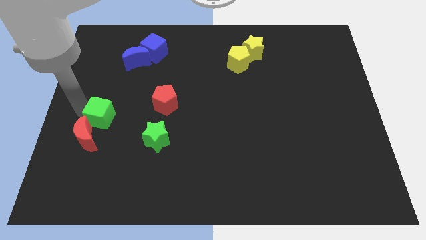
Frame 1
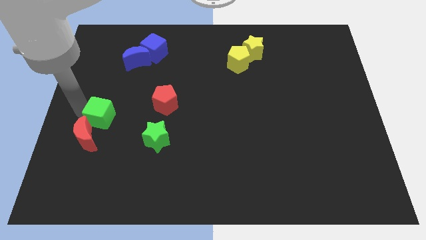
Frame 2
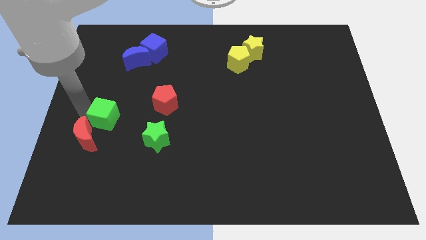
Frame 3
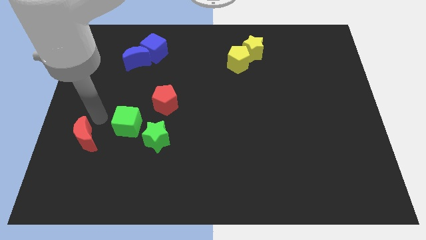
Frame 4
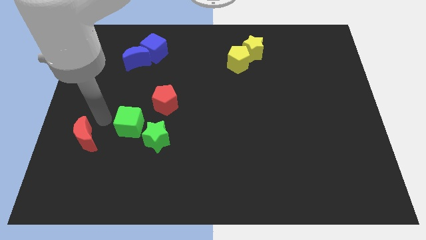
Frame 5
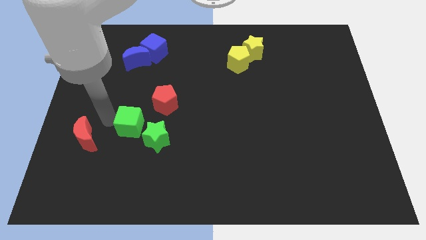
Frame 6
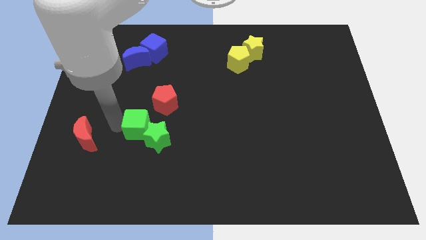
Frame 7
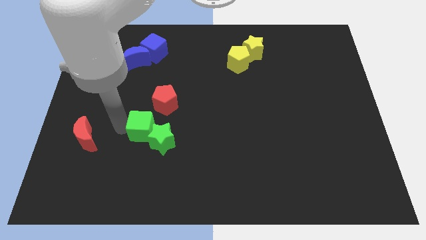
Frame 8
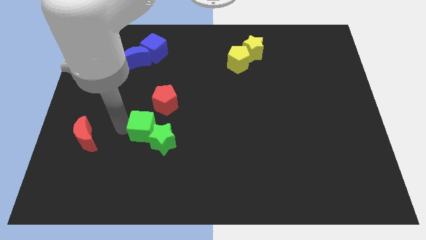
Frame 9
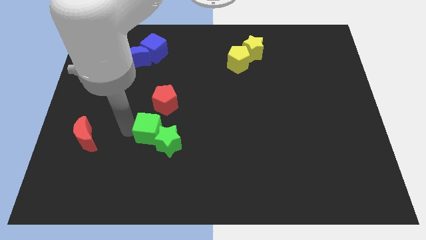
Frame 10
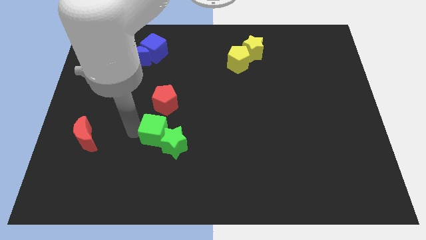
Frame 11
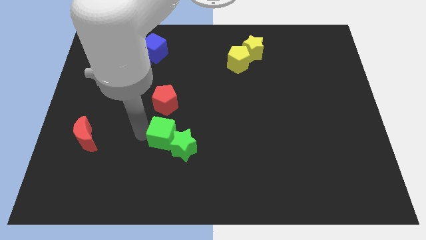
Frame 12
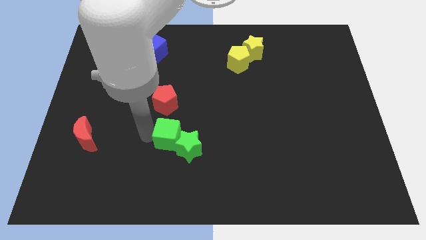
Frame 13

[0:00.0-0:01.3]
move the green cube into the green star

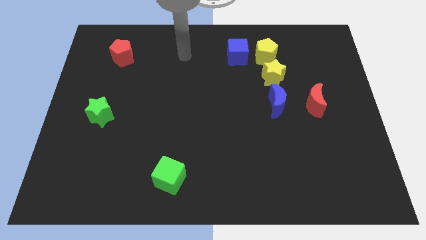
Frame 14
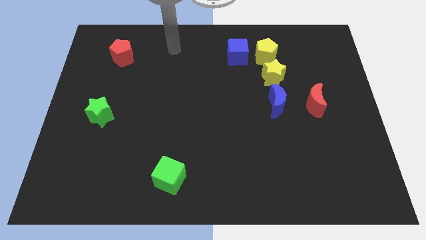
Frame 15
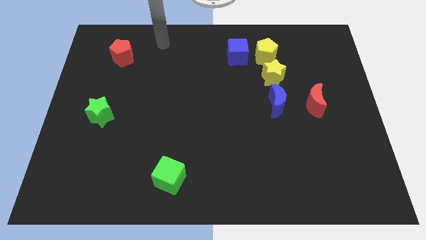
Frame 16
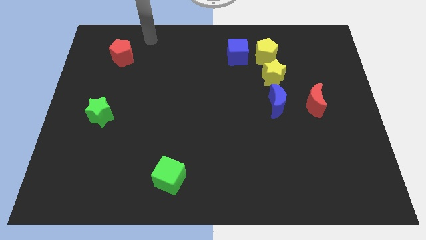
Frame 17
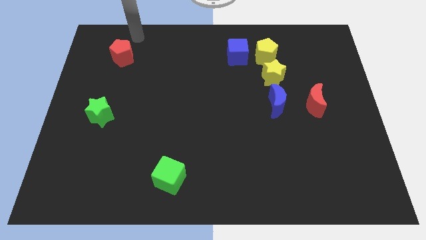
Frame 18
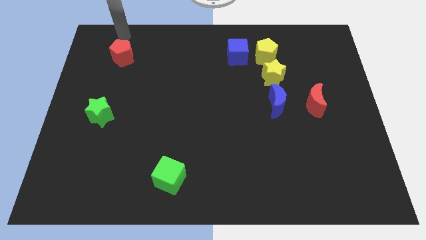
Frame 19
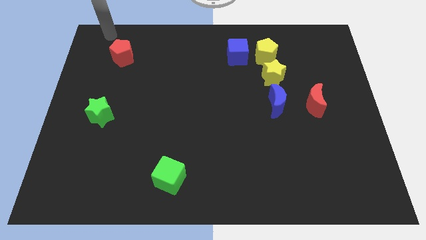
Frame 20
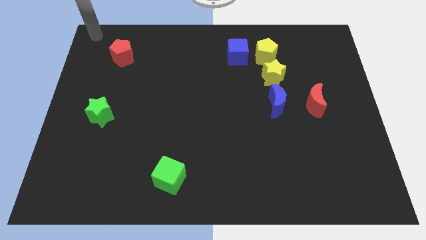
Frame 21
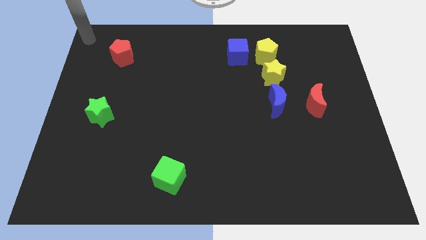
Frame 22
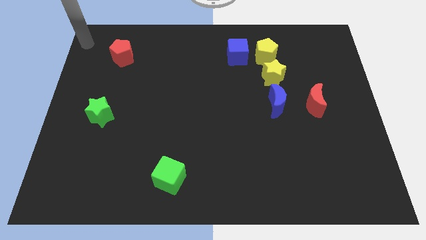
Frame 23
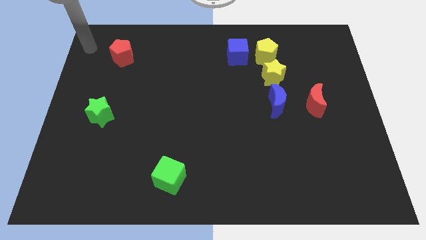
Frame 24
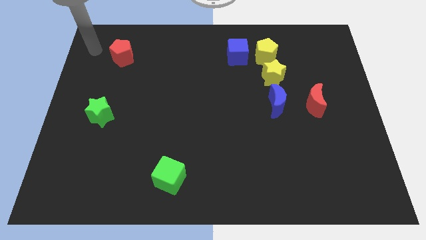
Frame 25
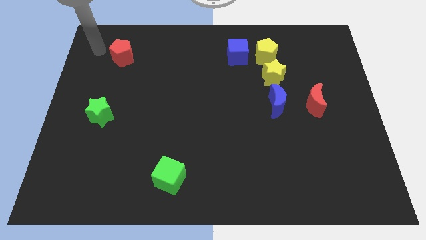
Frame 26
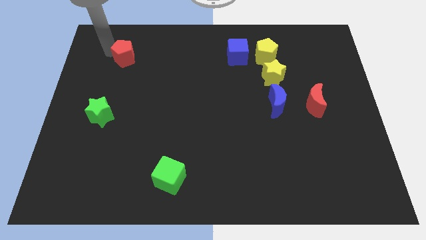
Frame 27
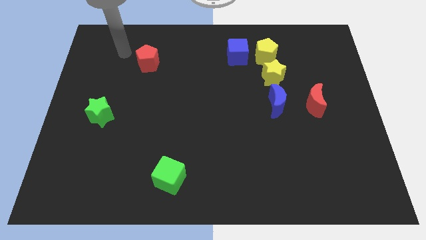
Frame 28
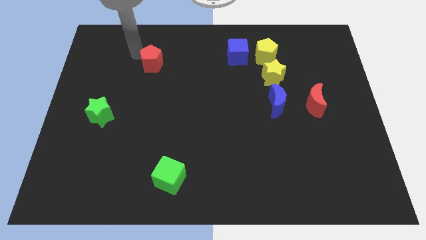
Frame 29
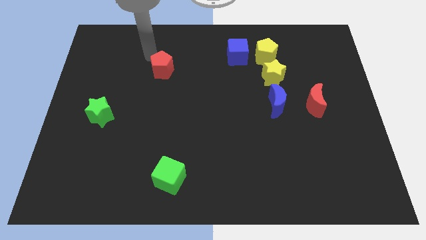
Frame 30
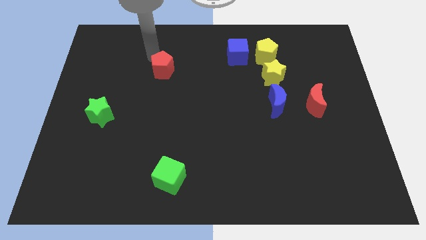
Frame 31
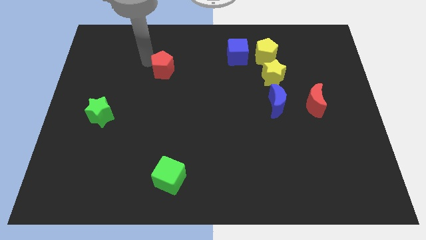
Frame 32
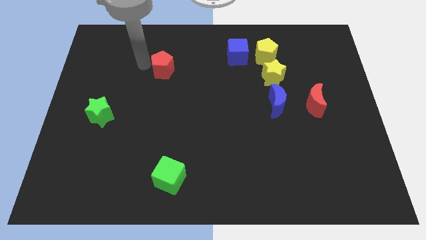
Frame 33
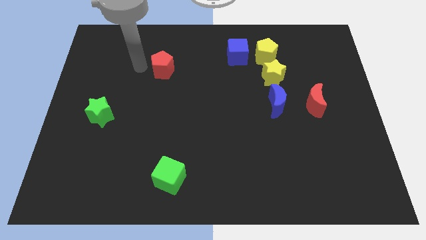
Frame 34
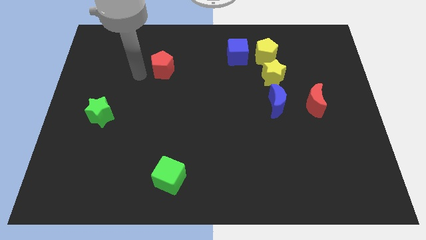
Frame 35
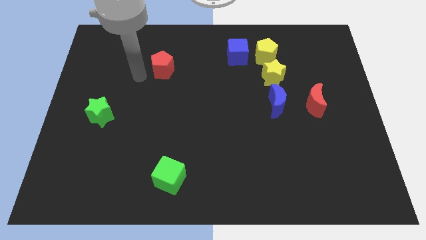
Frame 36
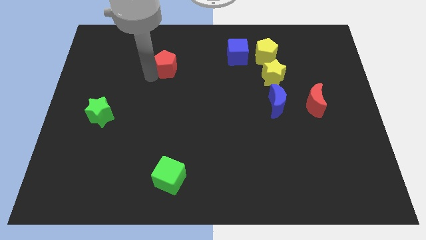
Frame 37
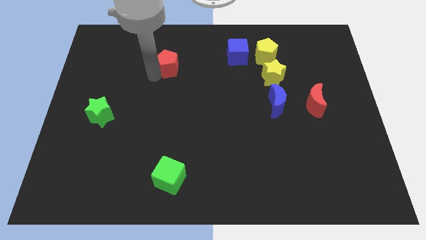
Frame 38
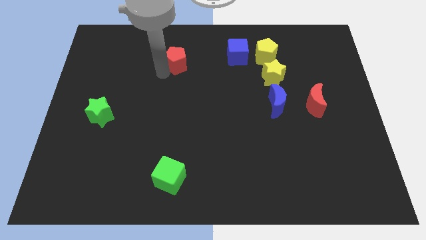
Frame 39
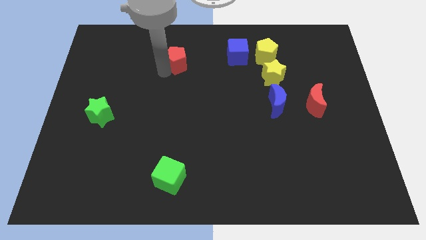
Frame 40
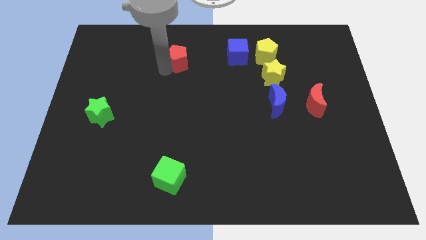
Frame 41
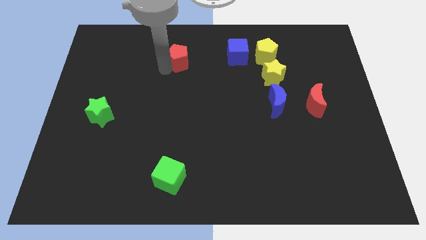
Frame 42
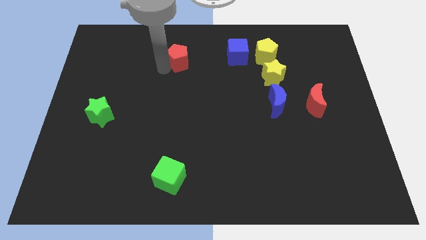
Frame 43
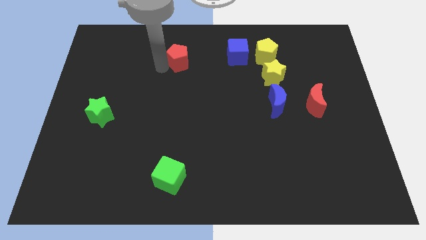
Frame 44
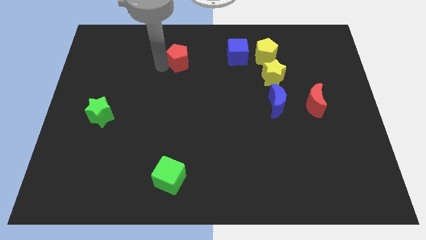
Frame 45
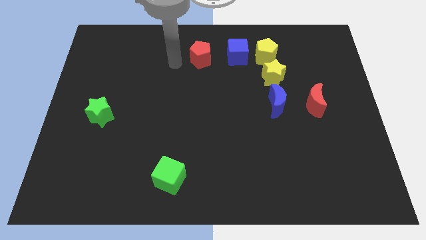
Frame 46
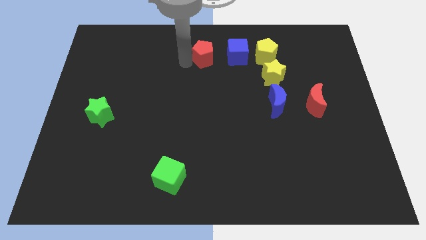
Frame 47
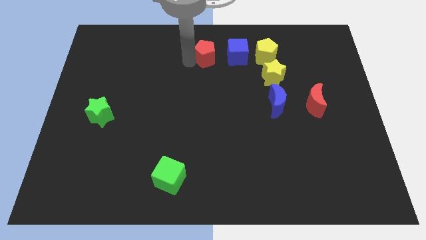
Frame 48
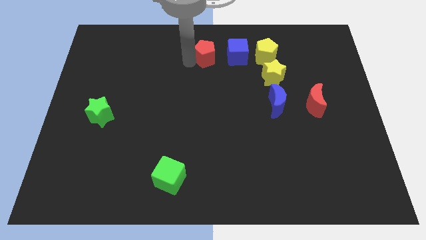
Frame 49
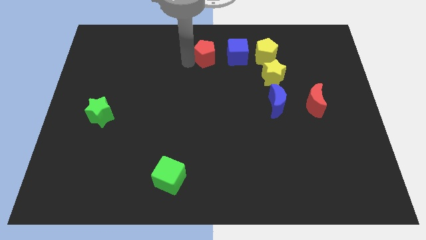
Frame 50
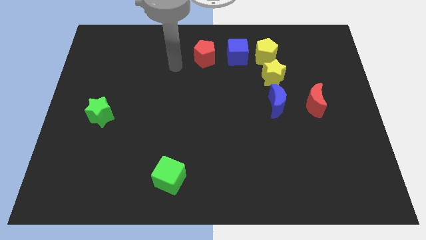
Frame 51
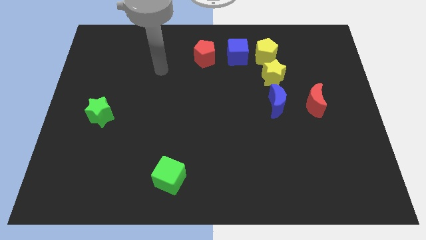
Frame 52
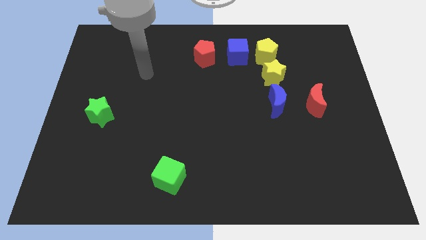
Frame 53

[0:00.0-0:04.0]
drag the red pentagon horizontally left of the blue cube

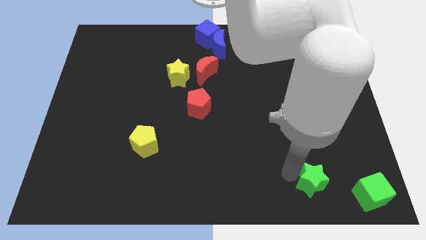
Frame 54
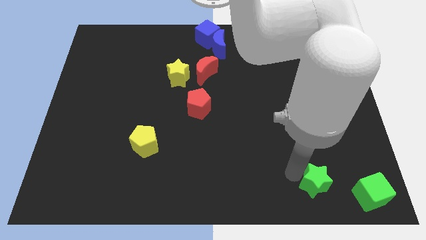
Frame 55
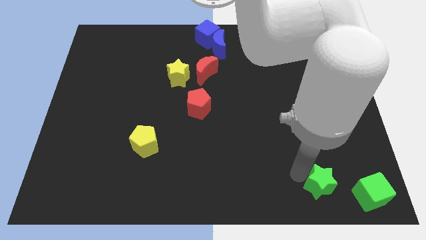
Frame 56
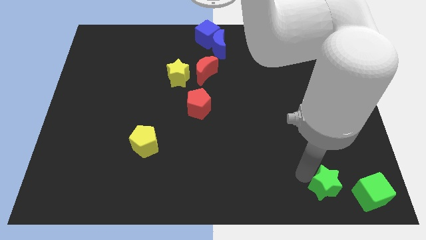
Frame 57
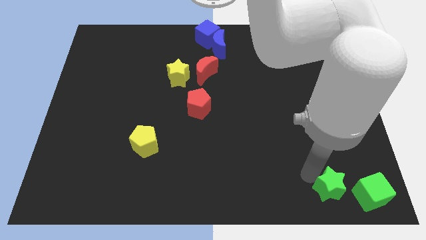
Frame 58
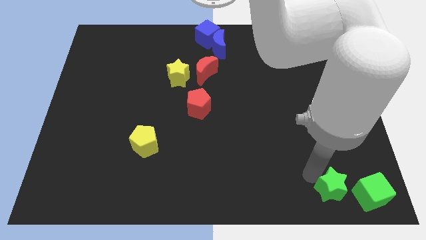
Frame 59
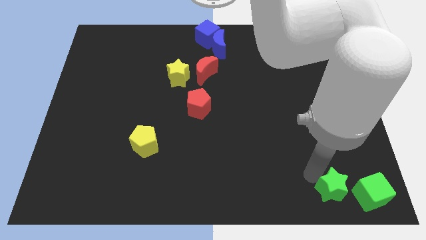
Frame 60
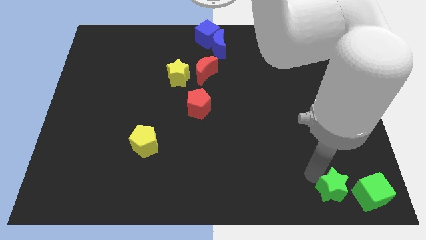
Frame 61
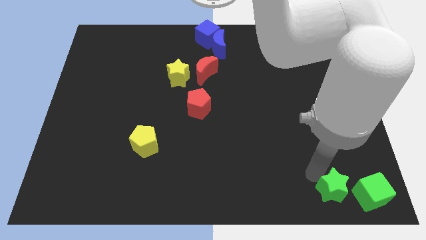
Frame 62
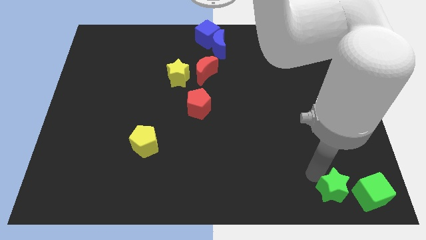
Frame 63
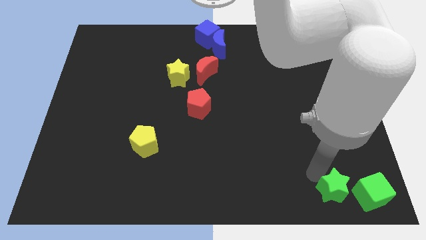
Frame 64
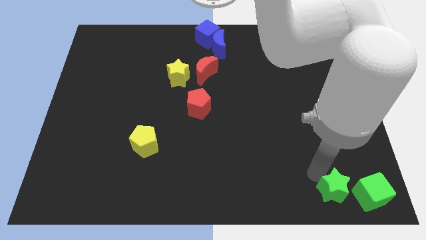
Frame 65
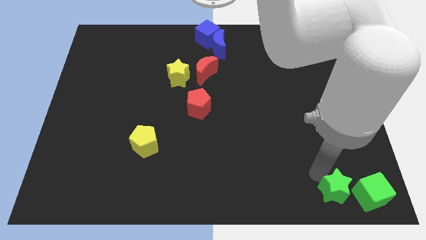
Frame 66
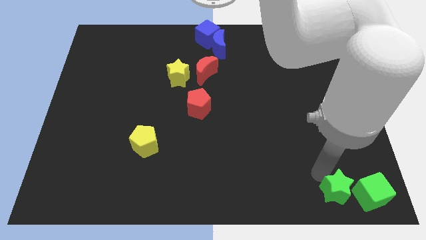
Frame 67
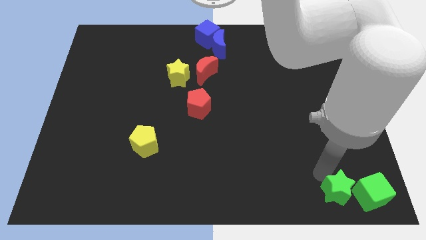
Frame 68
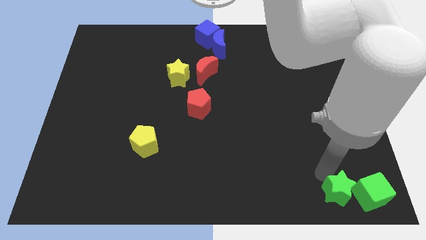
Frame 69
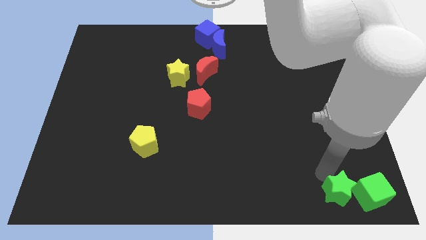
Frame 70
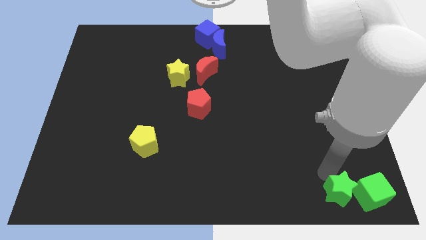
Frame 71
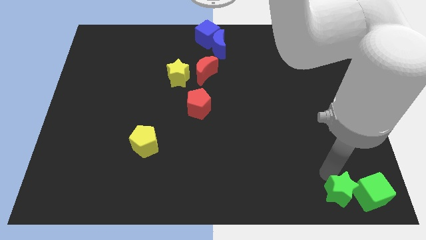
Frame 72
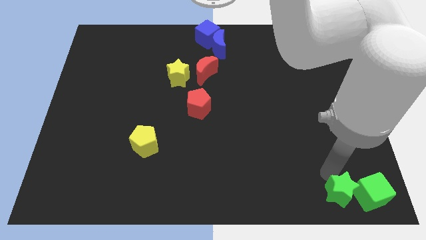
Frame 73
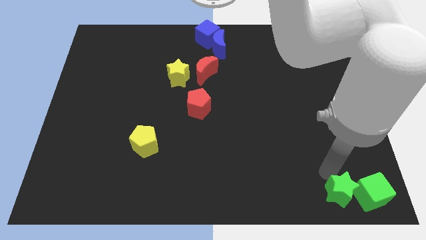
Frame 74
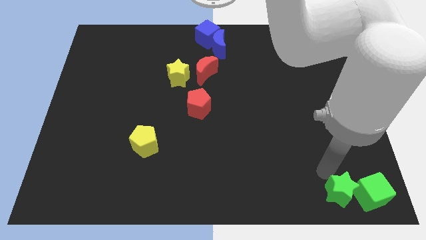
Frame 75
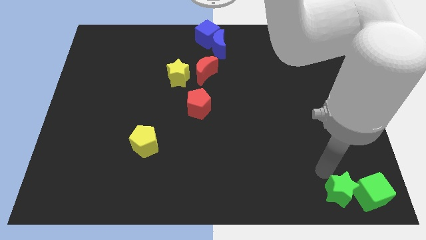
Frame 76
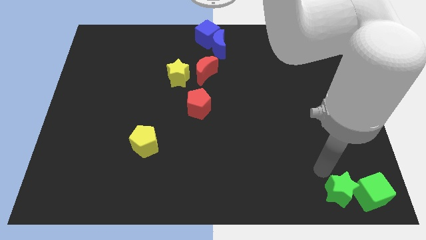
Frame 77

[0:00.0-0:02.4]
move green star into green cube

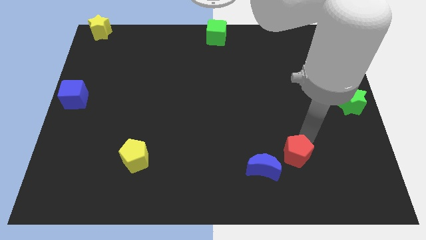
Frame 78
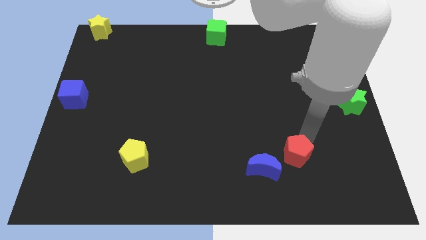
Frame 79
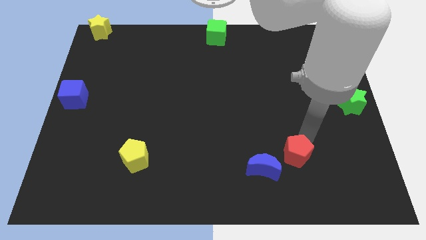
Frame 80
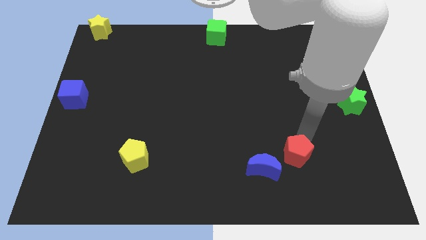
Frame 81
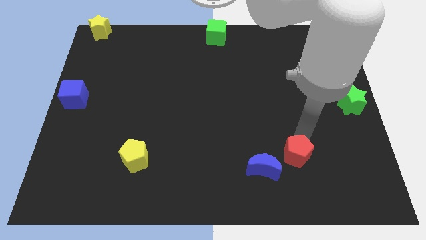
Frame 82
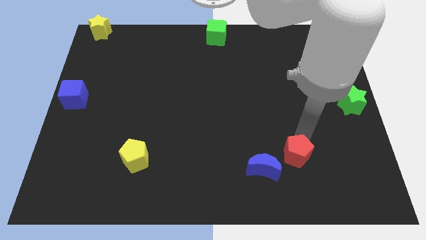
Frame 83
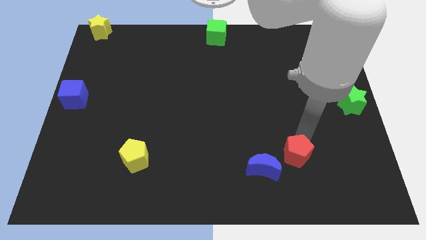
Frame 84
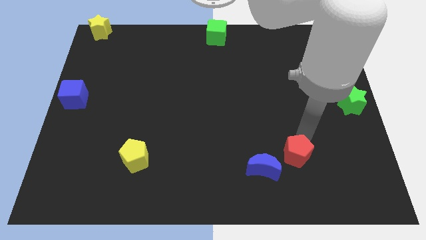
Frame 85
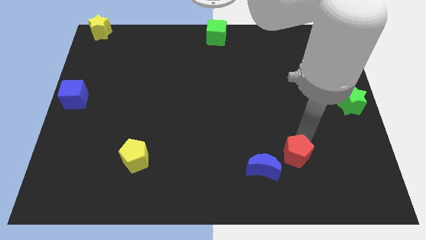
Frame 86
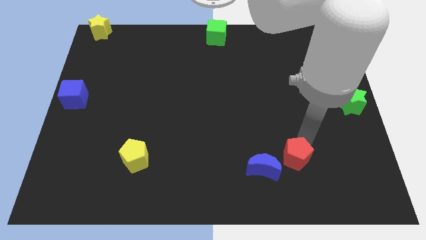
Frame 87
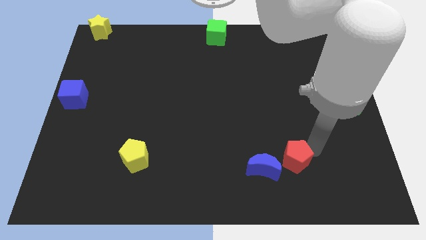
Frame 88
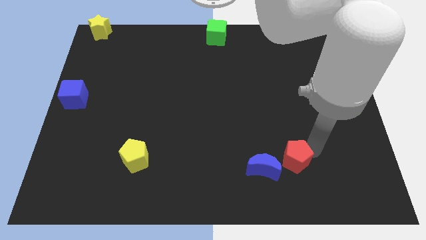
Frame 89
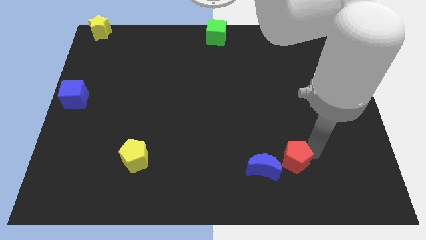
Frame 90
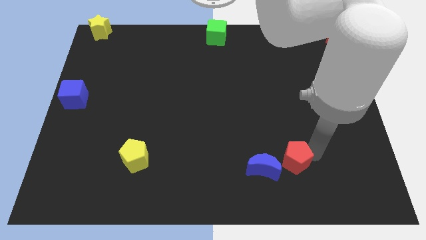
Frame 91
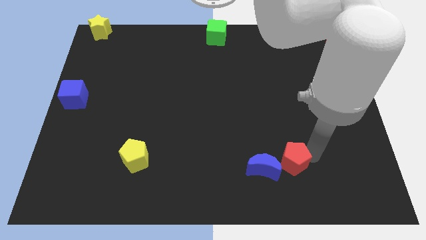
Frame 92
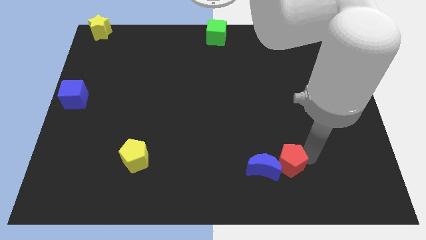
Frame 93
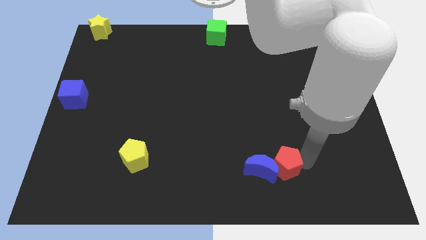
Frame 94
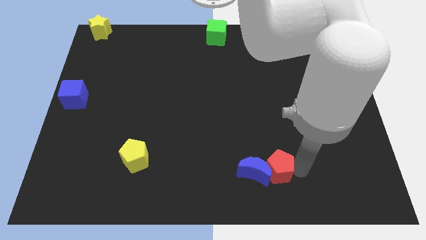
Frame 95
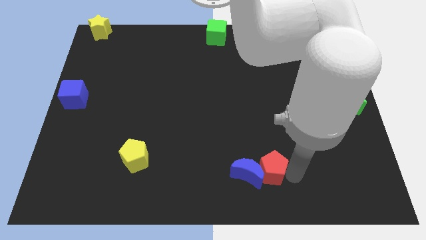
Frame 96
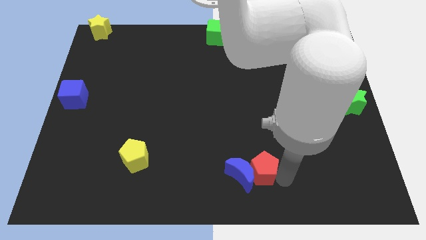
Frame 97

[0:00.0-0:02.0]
put the red pentagon into the blue moon
